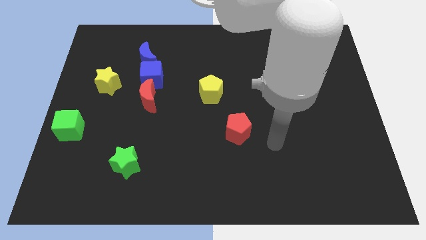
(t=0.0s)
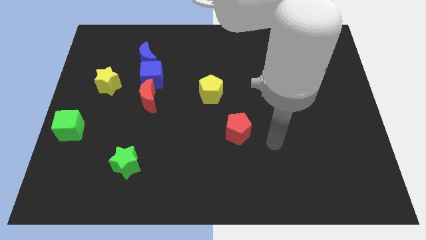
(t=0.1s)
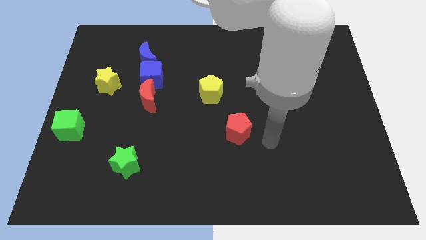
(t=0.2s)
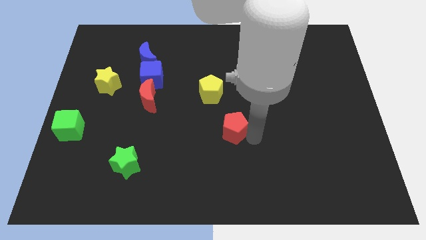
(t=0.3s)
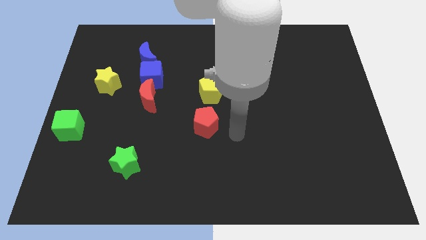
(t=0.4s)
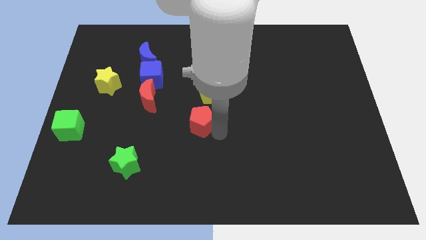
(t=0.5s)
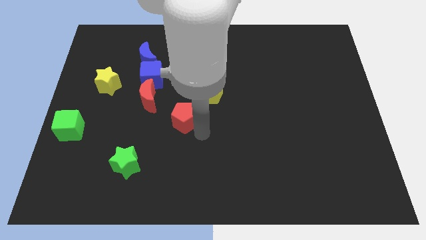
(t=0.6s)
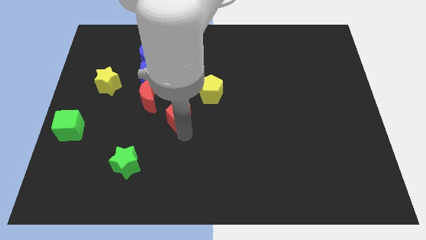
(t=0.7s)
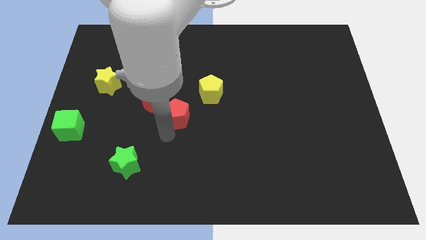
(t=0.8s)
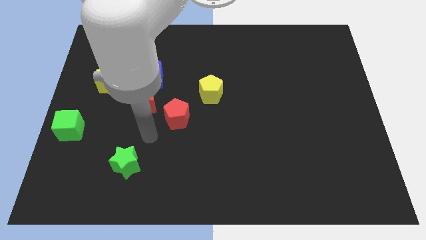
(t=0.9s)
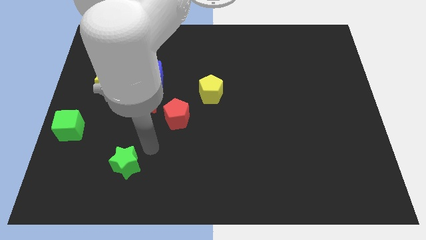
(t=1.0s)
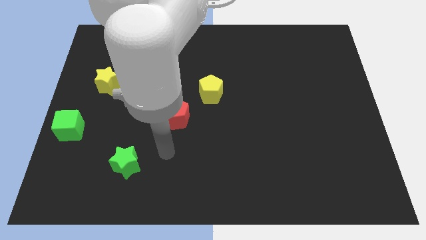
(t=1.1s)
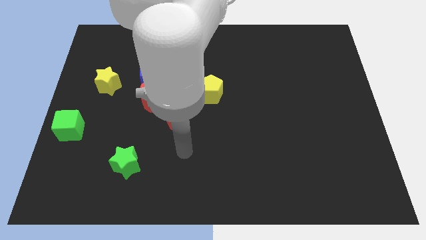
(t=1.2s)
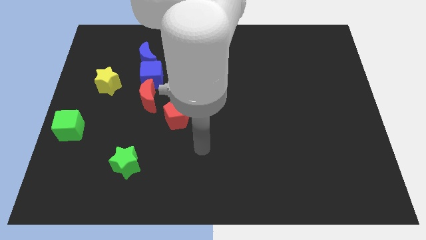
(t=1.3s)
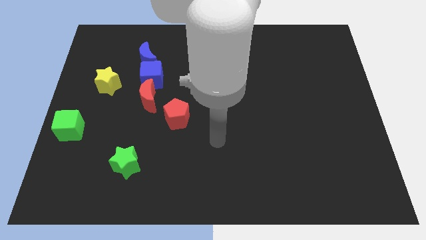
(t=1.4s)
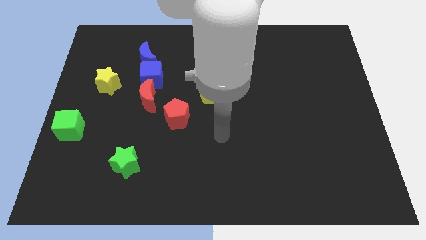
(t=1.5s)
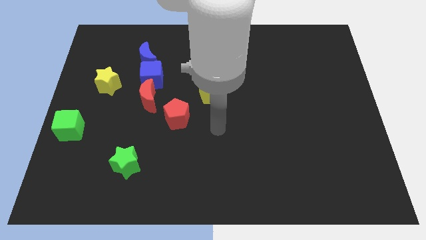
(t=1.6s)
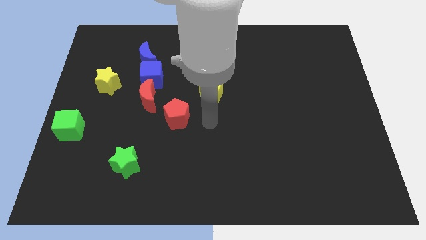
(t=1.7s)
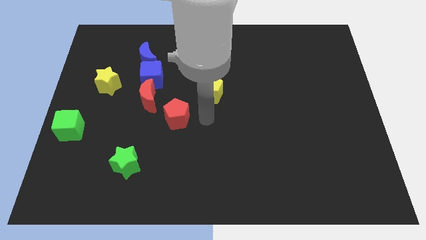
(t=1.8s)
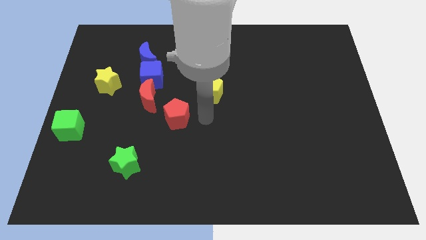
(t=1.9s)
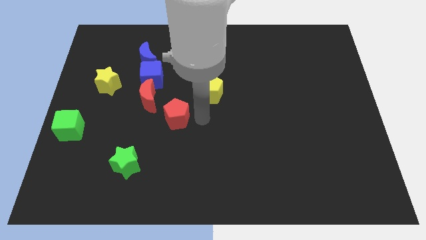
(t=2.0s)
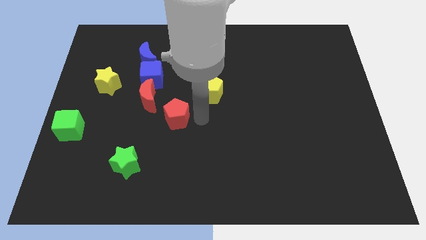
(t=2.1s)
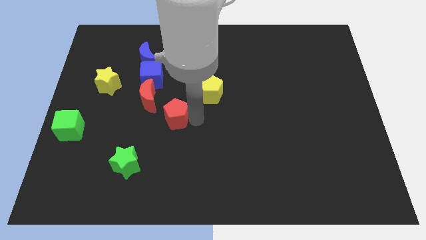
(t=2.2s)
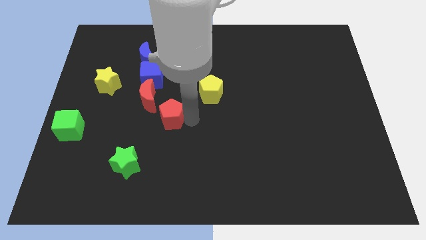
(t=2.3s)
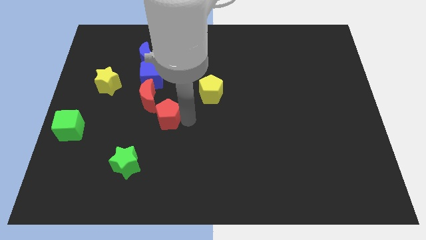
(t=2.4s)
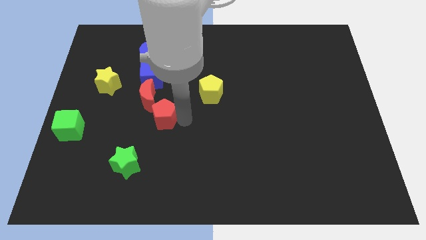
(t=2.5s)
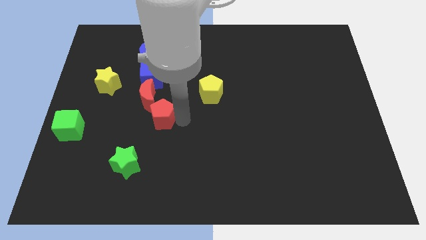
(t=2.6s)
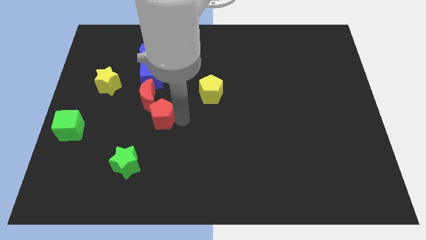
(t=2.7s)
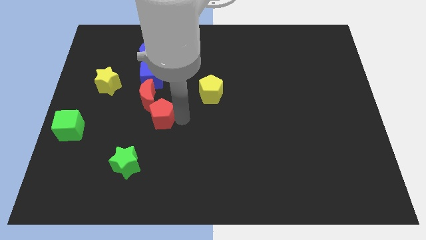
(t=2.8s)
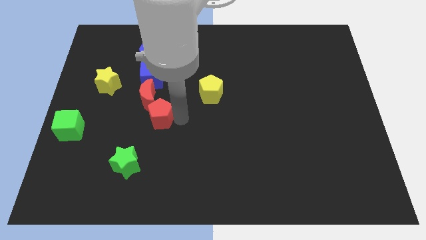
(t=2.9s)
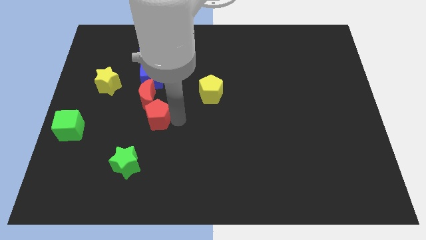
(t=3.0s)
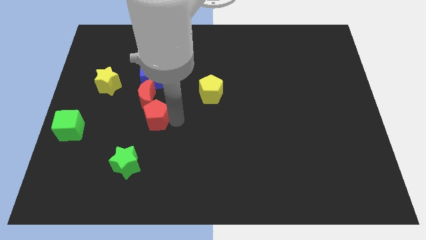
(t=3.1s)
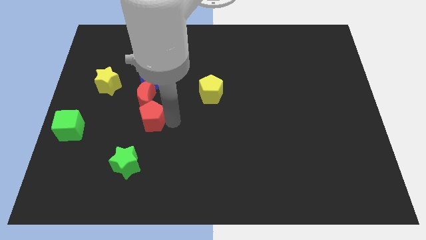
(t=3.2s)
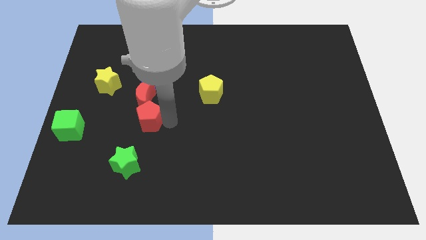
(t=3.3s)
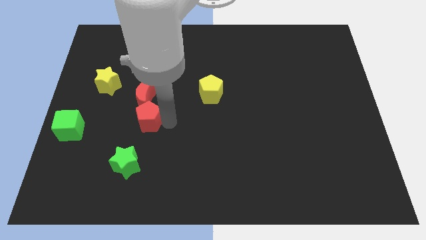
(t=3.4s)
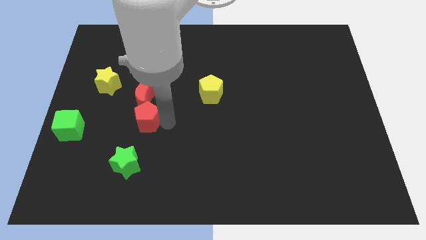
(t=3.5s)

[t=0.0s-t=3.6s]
place the red penntagon below the red moon

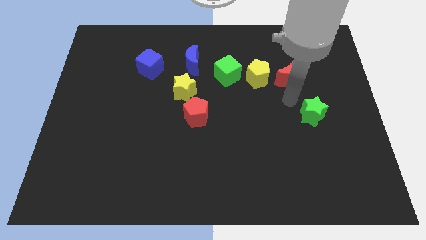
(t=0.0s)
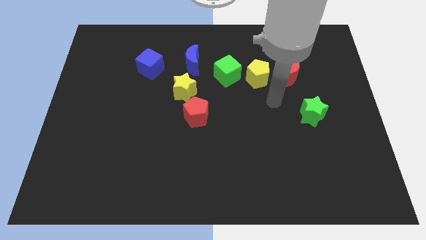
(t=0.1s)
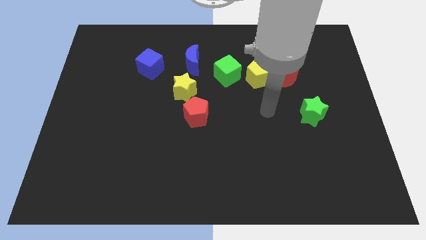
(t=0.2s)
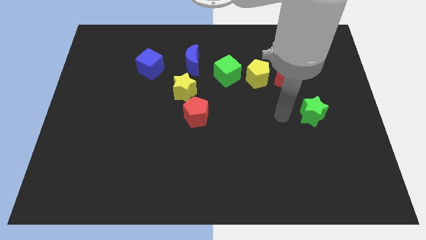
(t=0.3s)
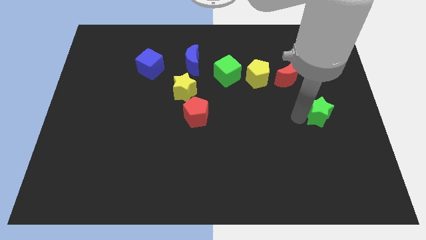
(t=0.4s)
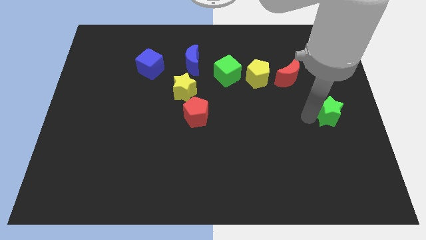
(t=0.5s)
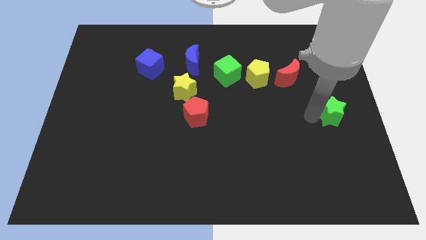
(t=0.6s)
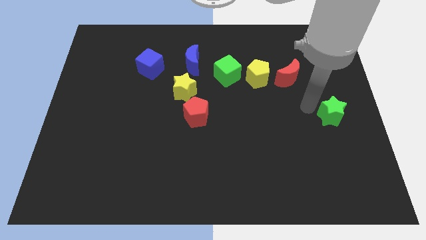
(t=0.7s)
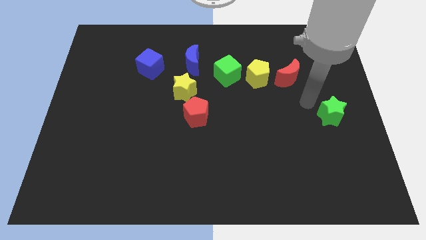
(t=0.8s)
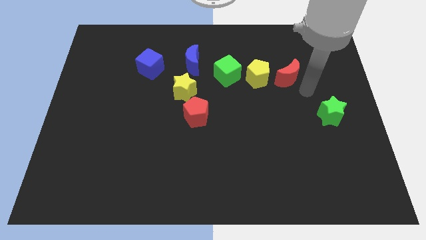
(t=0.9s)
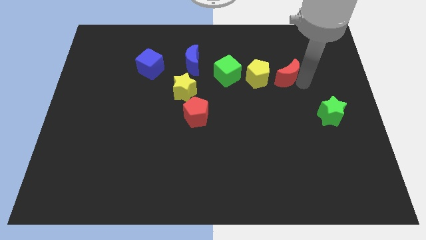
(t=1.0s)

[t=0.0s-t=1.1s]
slide the green star towards the center right of the board

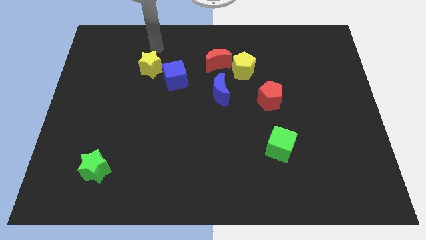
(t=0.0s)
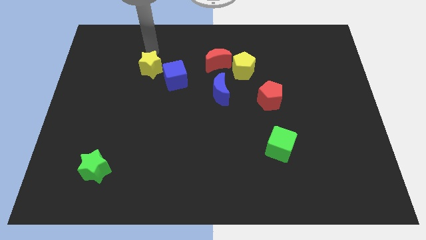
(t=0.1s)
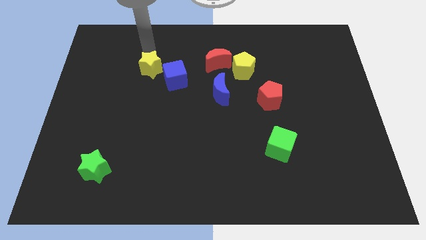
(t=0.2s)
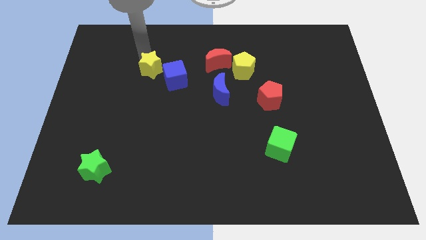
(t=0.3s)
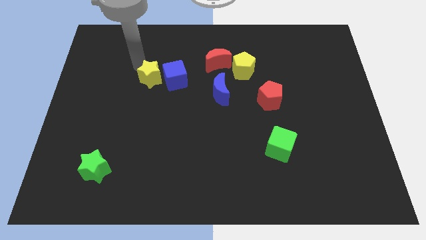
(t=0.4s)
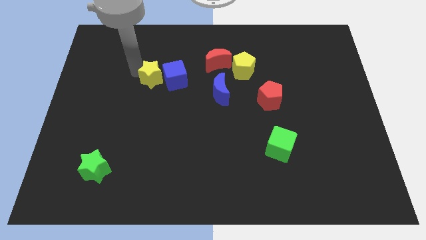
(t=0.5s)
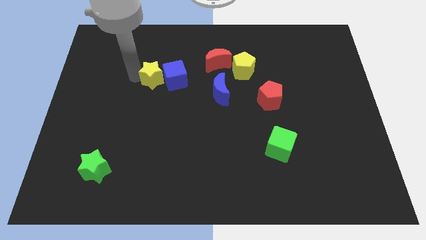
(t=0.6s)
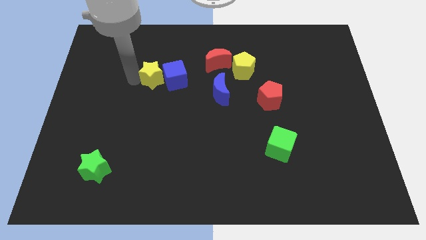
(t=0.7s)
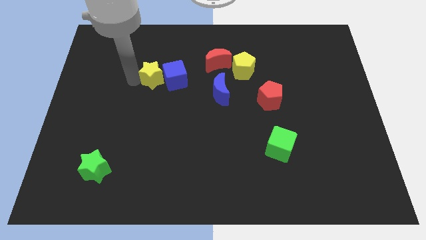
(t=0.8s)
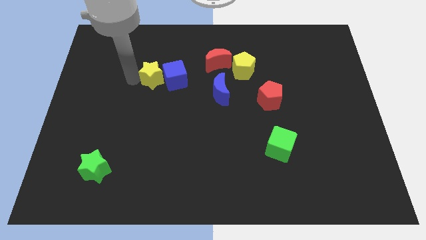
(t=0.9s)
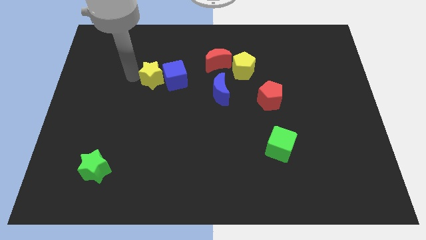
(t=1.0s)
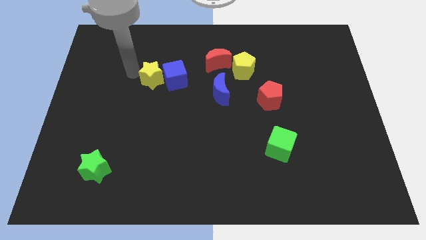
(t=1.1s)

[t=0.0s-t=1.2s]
place the yellow star left to the blue cube

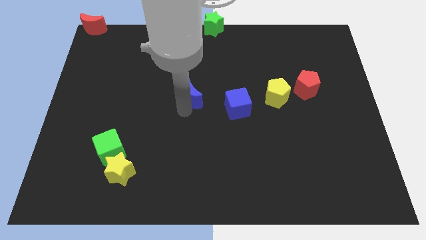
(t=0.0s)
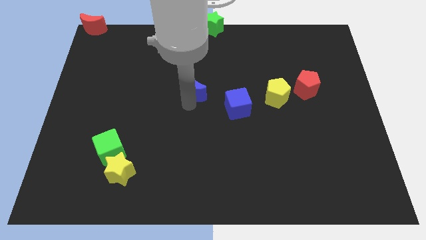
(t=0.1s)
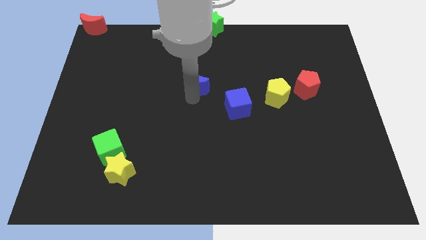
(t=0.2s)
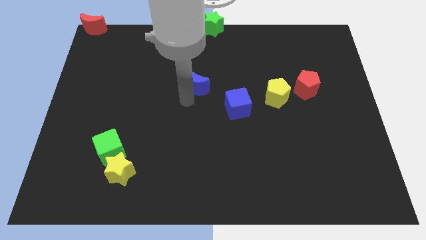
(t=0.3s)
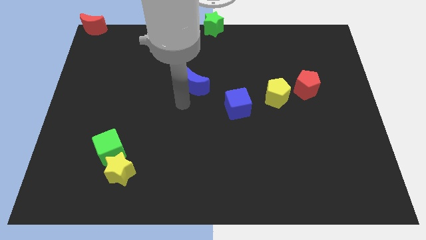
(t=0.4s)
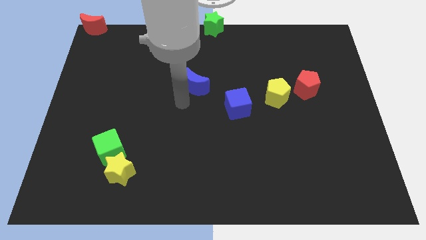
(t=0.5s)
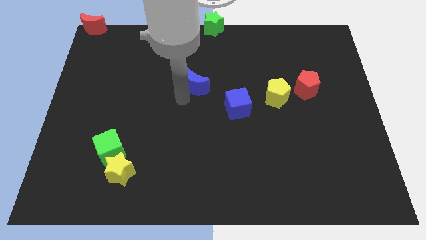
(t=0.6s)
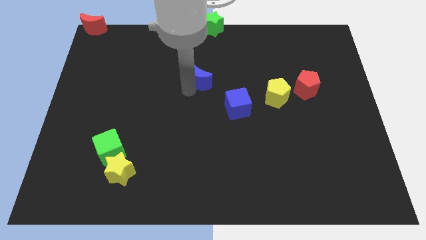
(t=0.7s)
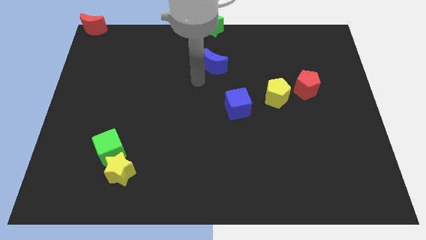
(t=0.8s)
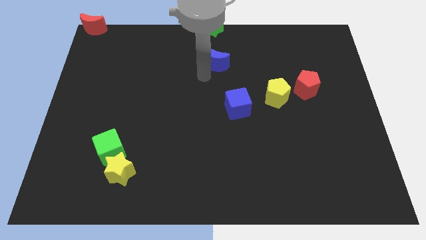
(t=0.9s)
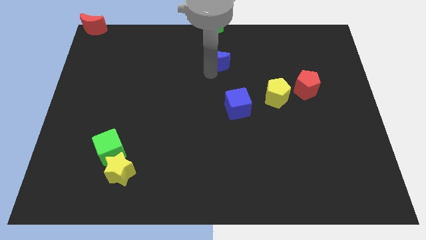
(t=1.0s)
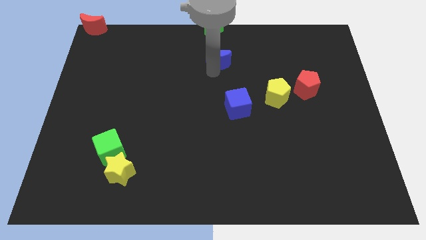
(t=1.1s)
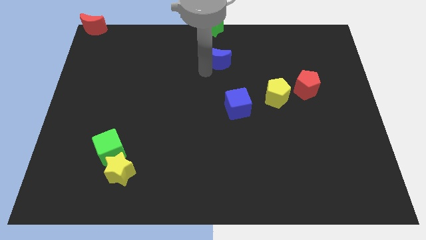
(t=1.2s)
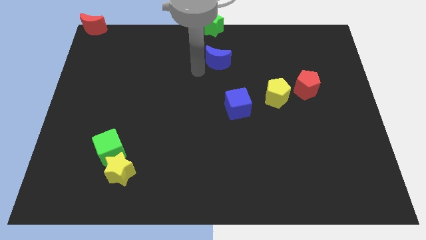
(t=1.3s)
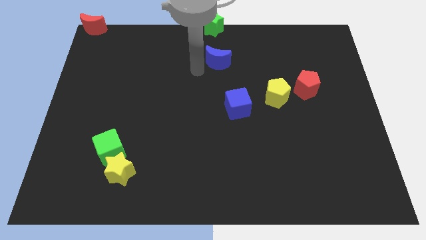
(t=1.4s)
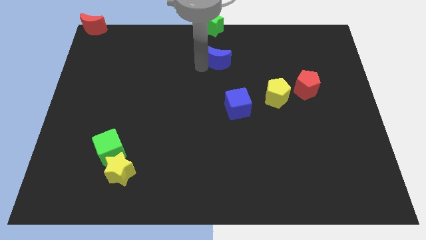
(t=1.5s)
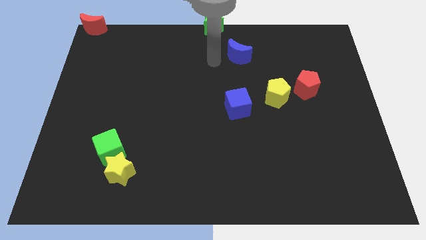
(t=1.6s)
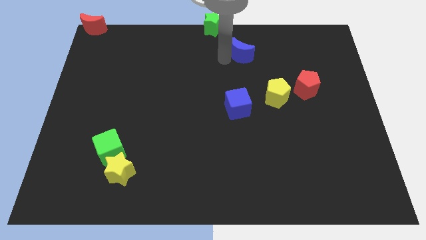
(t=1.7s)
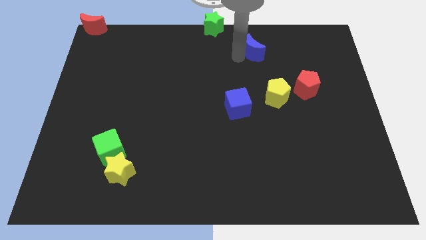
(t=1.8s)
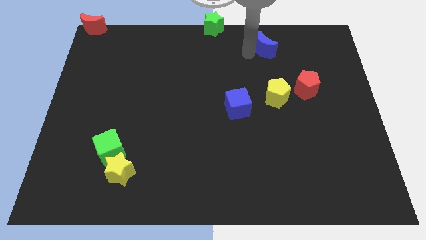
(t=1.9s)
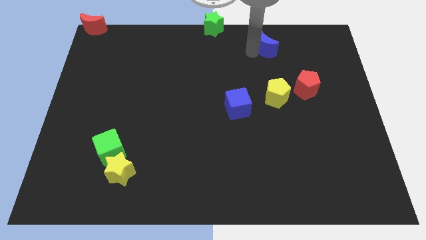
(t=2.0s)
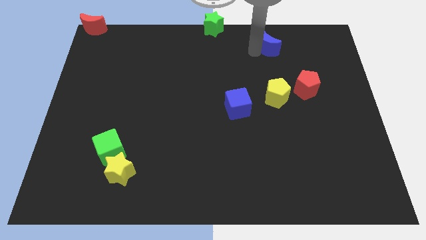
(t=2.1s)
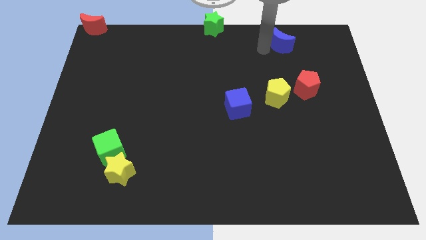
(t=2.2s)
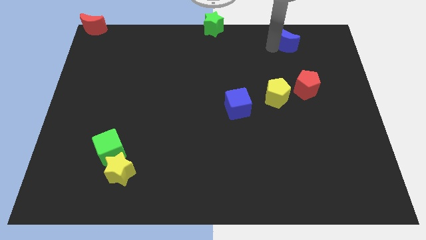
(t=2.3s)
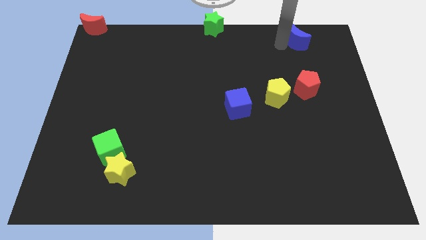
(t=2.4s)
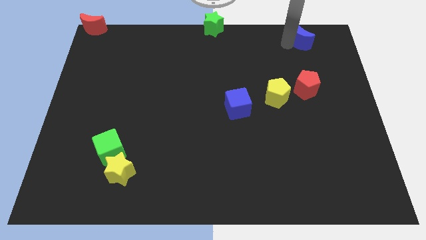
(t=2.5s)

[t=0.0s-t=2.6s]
push blue crescent below red pentagon

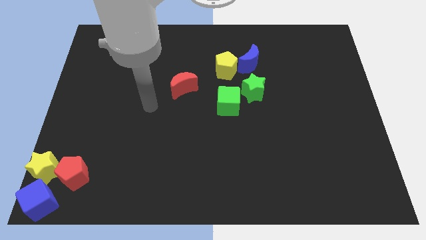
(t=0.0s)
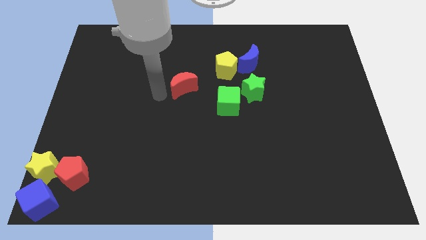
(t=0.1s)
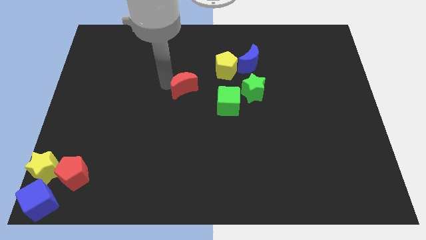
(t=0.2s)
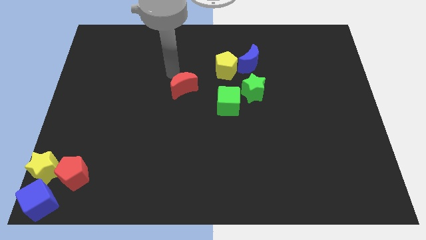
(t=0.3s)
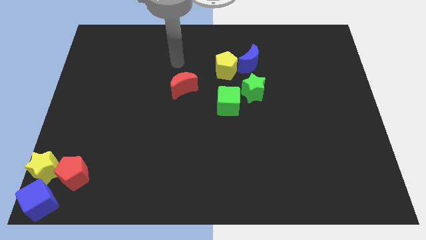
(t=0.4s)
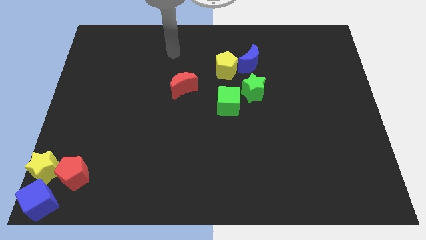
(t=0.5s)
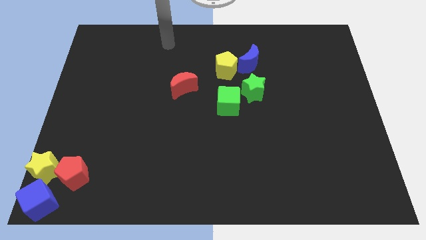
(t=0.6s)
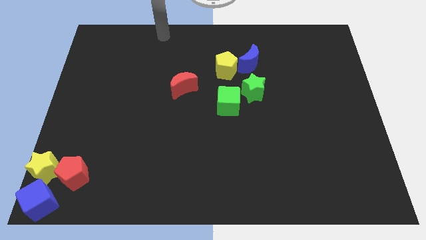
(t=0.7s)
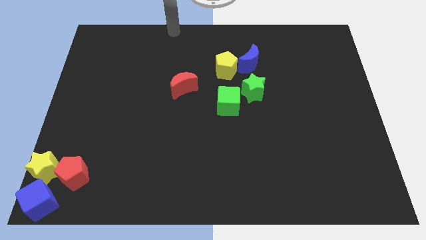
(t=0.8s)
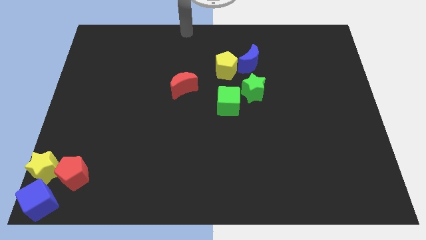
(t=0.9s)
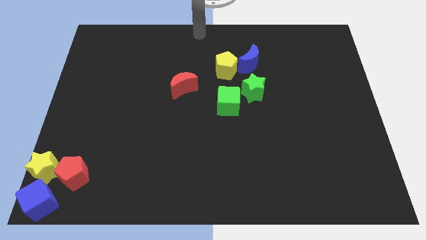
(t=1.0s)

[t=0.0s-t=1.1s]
place arm on the center top
